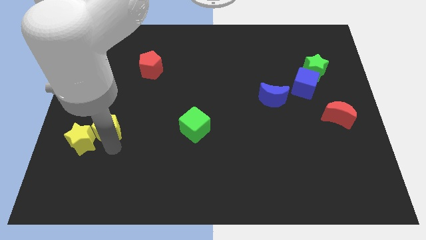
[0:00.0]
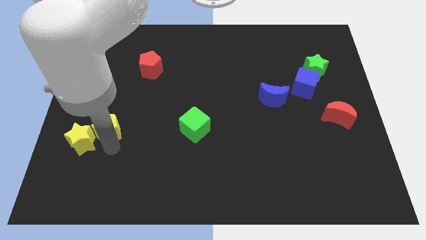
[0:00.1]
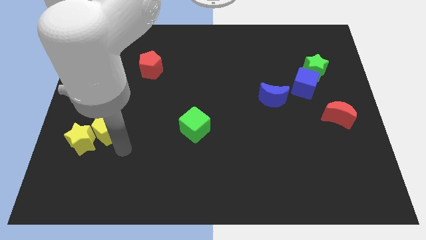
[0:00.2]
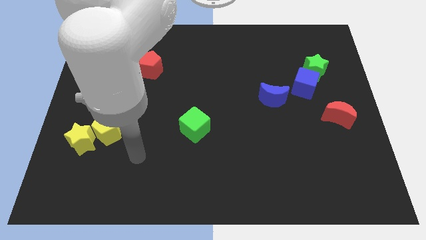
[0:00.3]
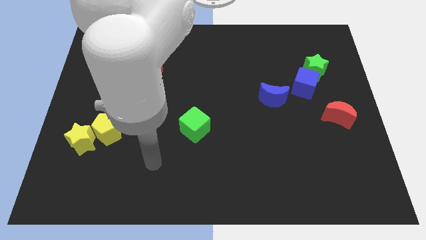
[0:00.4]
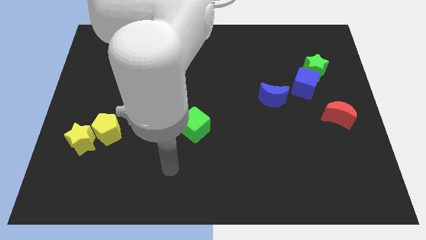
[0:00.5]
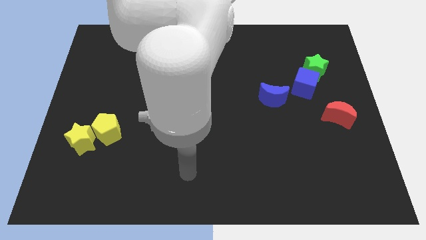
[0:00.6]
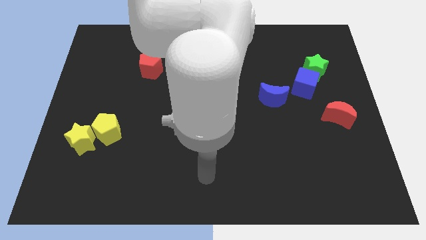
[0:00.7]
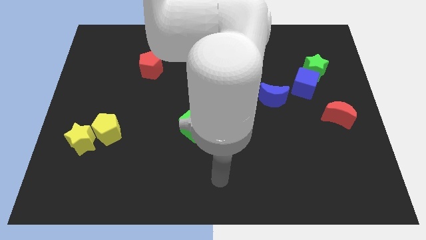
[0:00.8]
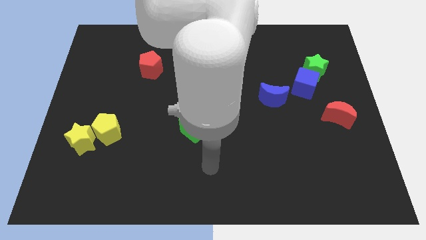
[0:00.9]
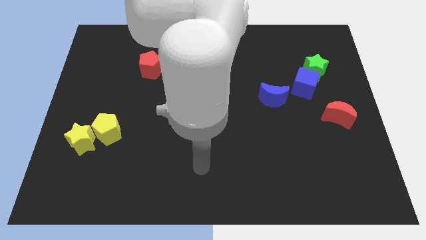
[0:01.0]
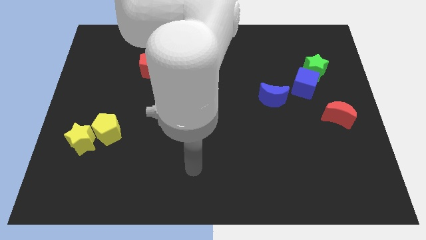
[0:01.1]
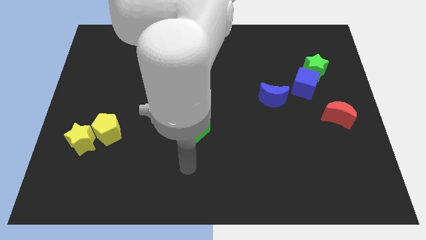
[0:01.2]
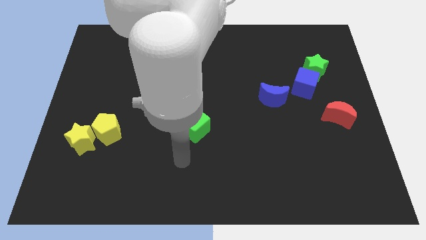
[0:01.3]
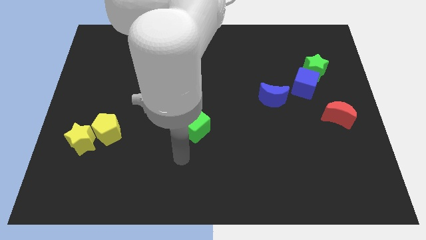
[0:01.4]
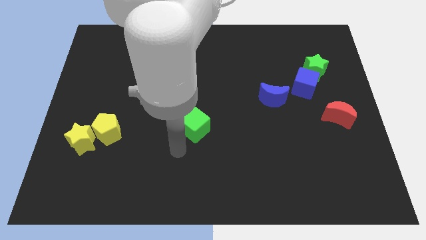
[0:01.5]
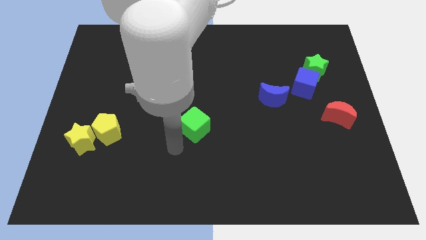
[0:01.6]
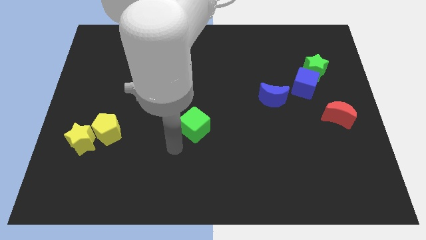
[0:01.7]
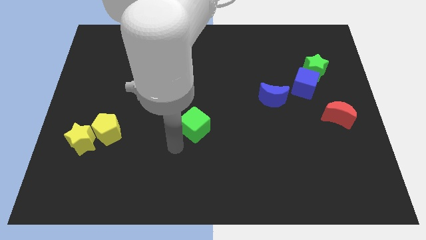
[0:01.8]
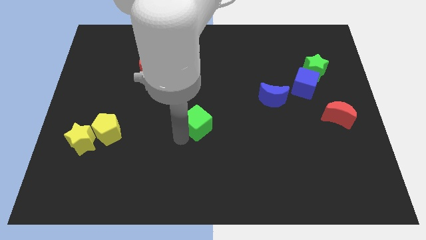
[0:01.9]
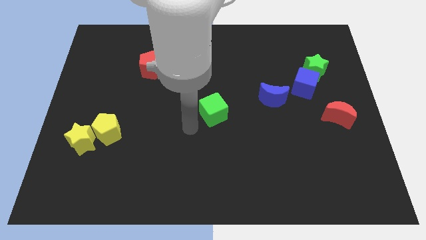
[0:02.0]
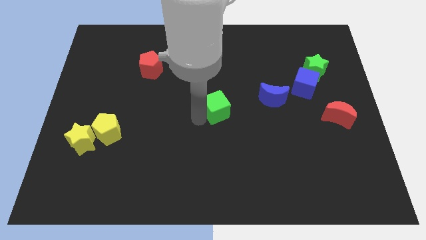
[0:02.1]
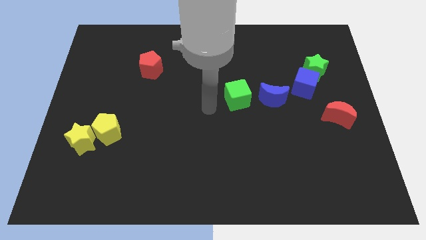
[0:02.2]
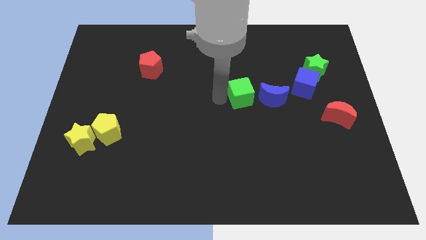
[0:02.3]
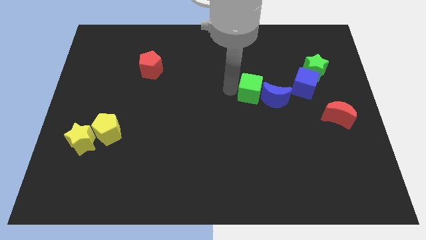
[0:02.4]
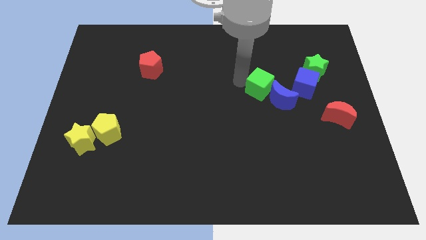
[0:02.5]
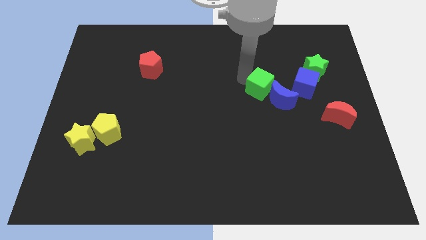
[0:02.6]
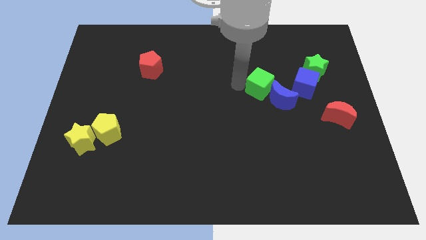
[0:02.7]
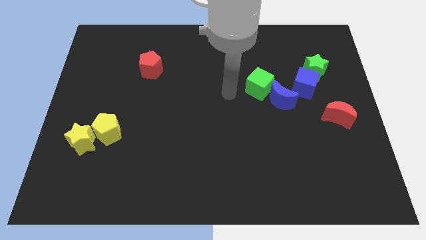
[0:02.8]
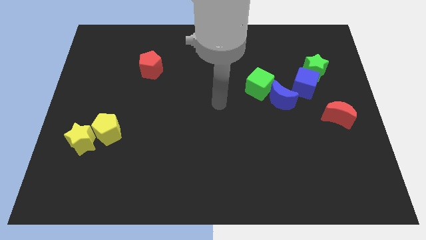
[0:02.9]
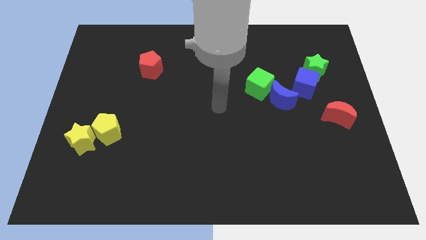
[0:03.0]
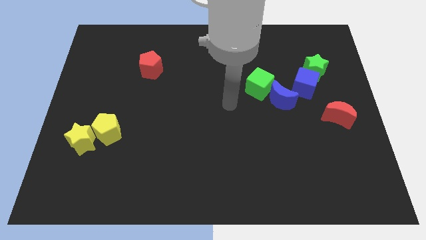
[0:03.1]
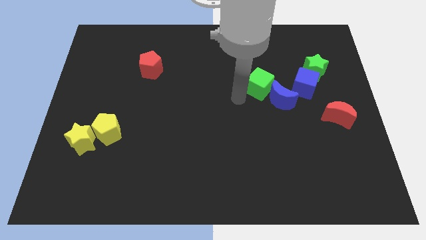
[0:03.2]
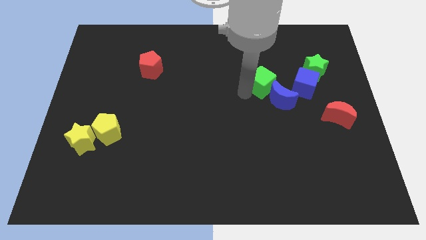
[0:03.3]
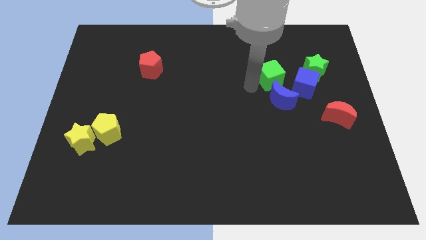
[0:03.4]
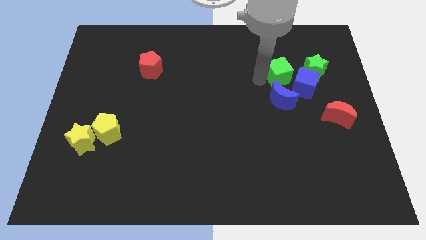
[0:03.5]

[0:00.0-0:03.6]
move the green cube to the top of the blue crescent

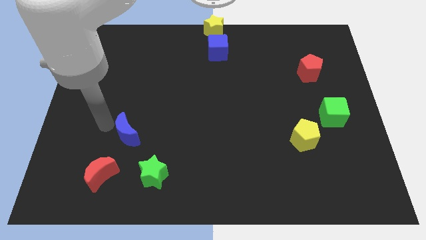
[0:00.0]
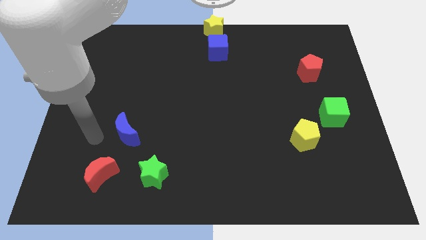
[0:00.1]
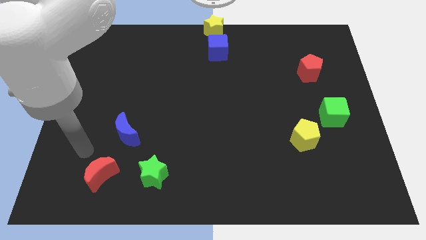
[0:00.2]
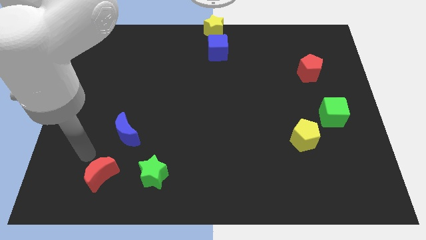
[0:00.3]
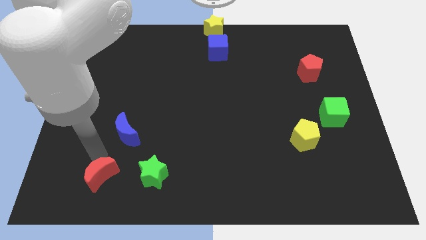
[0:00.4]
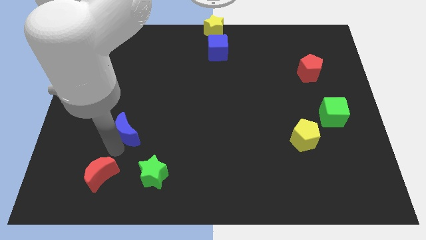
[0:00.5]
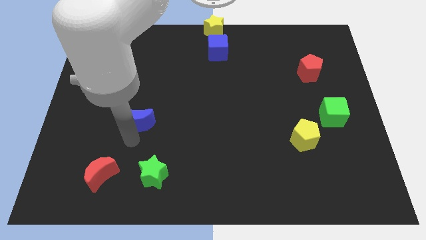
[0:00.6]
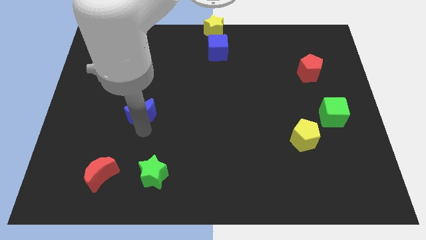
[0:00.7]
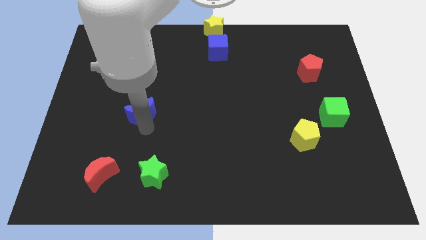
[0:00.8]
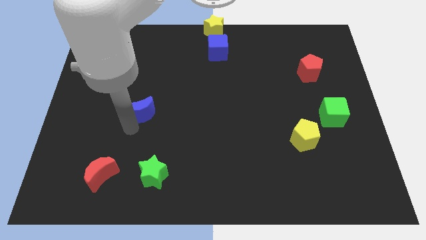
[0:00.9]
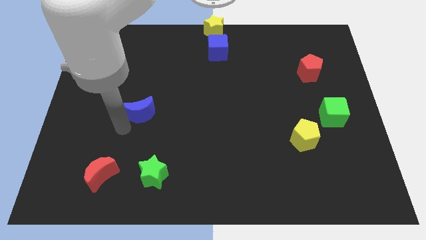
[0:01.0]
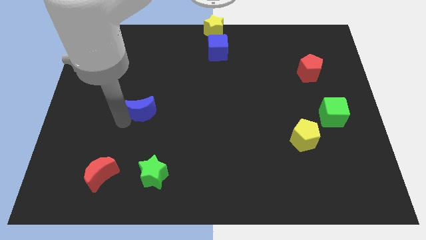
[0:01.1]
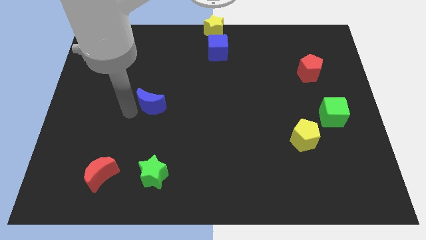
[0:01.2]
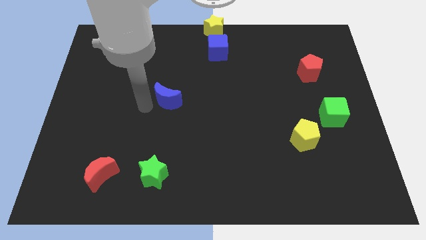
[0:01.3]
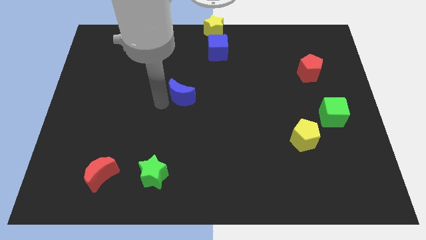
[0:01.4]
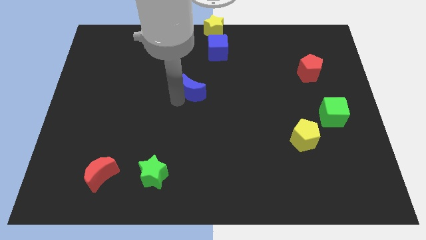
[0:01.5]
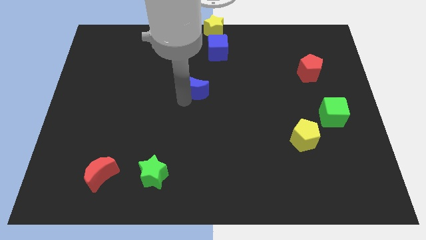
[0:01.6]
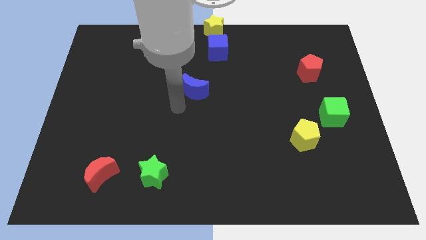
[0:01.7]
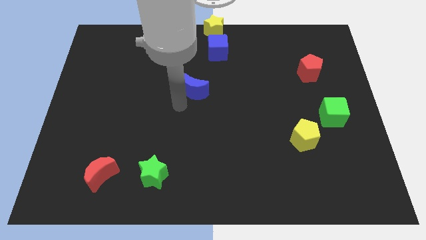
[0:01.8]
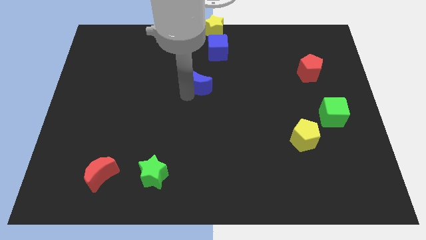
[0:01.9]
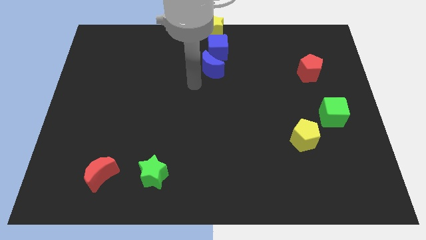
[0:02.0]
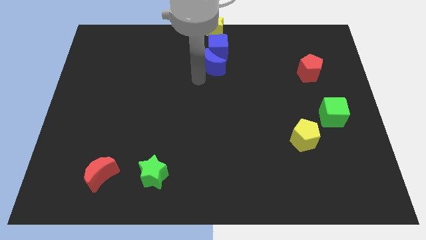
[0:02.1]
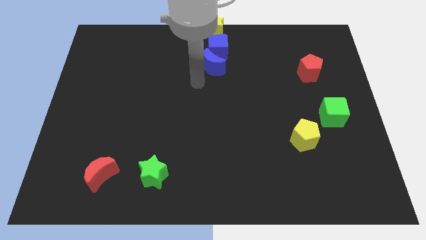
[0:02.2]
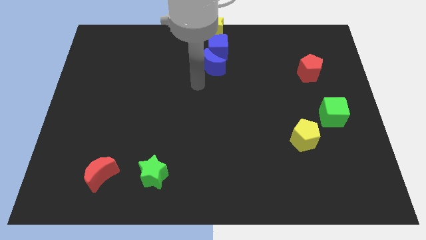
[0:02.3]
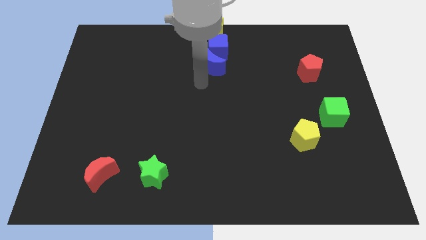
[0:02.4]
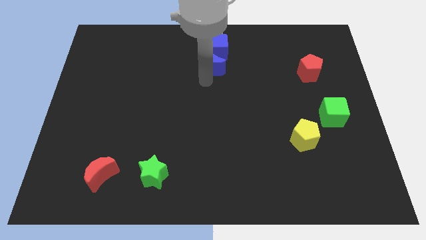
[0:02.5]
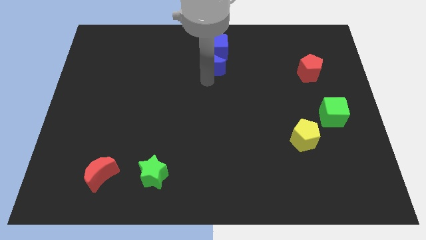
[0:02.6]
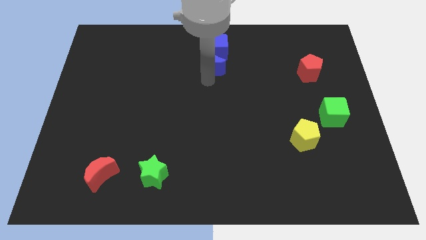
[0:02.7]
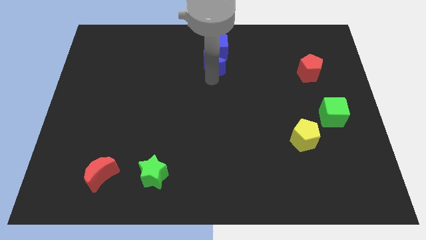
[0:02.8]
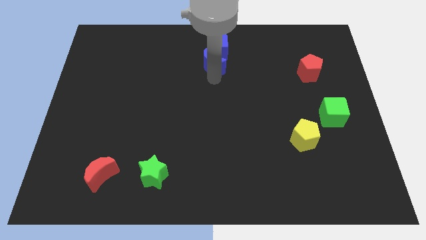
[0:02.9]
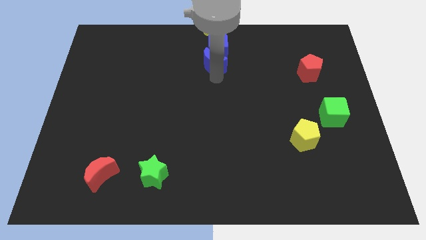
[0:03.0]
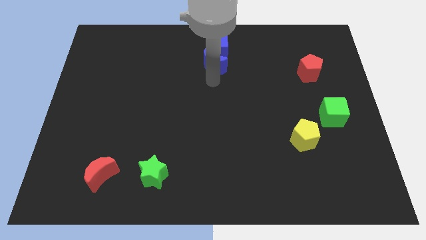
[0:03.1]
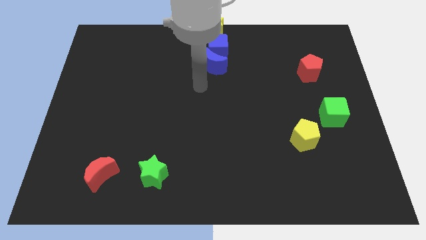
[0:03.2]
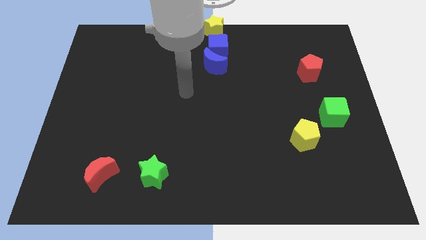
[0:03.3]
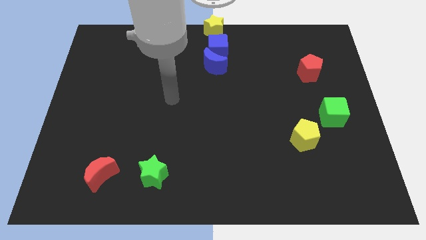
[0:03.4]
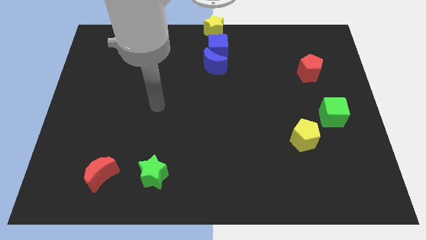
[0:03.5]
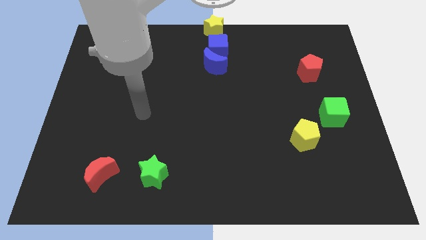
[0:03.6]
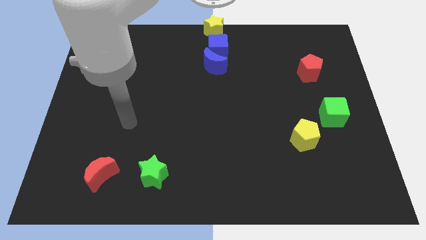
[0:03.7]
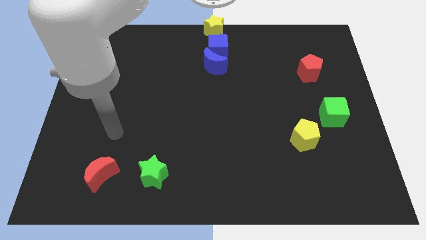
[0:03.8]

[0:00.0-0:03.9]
move the blue moon to the bottom of the blue cube

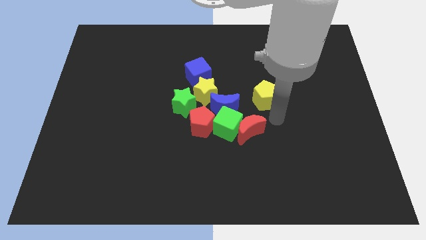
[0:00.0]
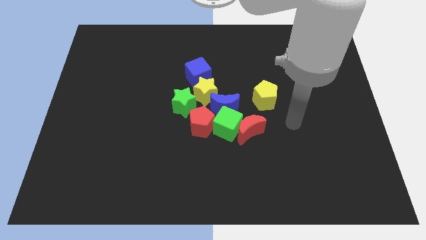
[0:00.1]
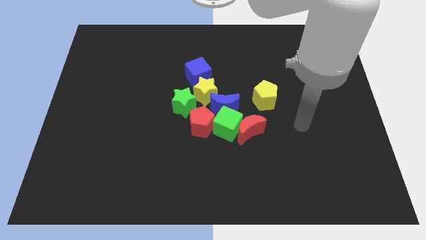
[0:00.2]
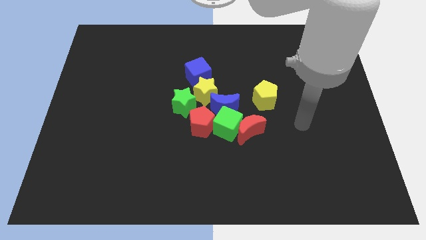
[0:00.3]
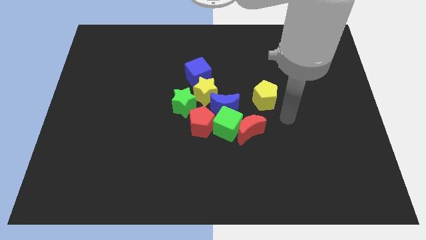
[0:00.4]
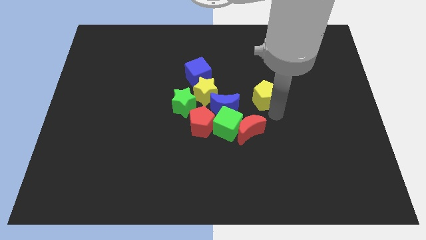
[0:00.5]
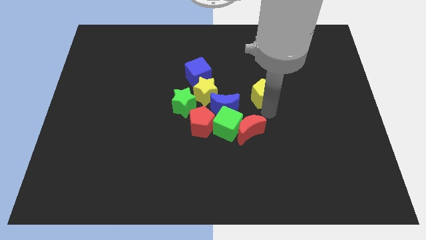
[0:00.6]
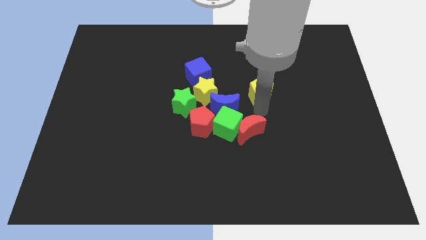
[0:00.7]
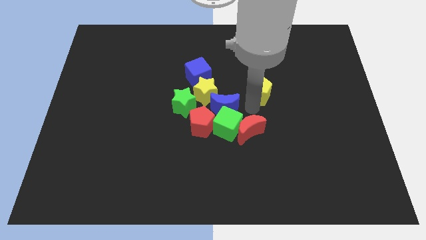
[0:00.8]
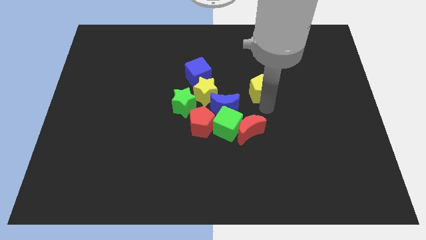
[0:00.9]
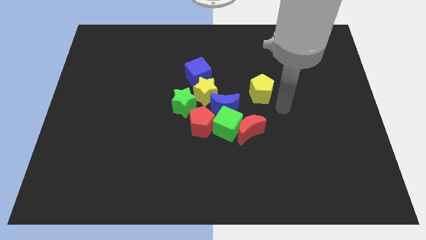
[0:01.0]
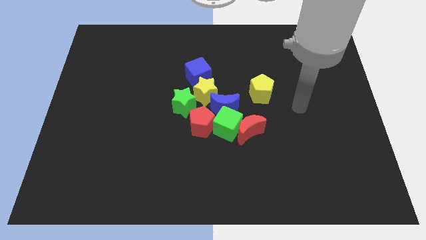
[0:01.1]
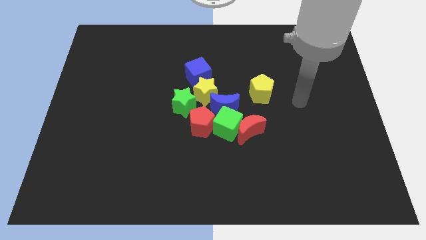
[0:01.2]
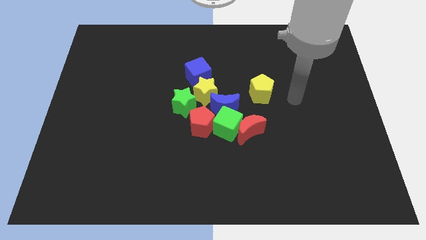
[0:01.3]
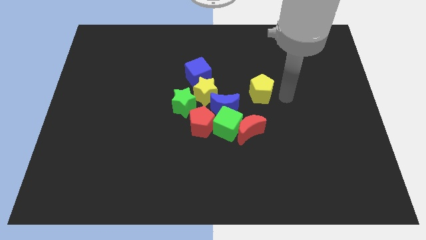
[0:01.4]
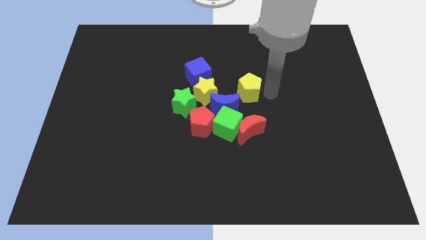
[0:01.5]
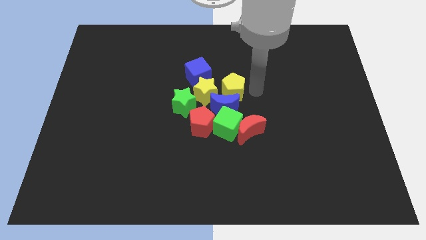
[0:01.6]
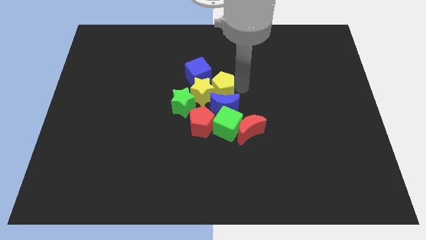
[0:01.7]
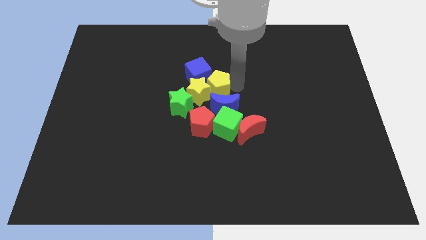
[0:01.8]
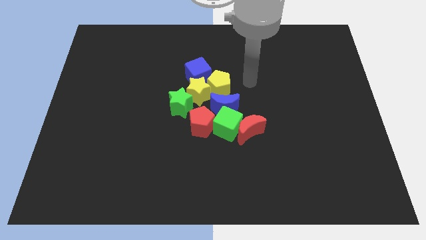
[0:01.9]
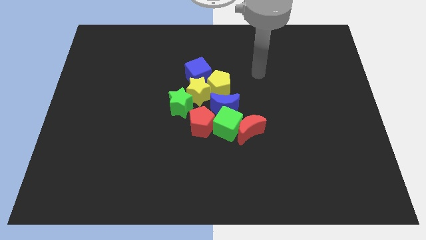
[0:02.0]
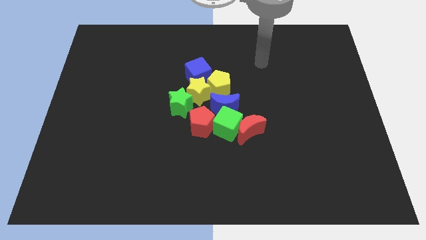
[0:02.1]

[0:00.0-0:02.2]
push the yellow pentagon into the group of blocks
